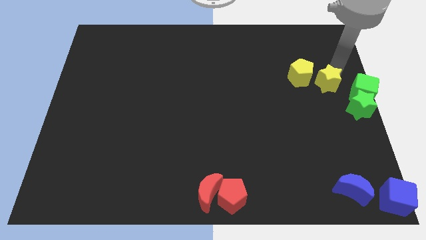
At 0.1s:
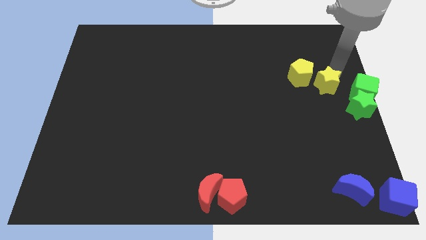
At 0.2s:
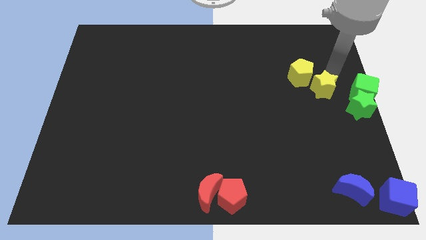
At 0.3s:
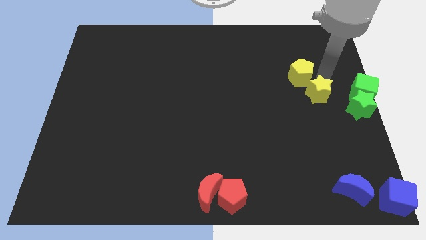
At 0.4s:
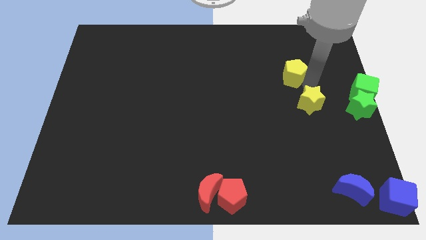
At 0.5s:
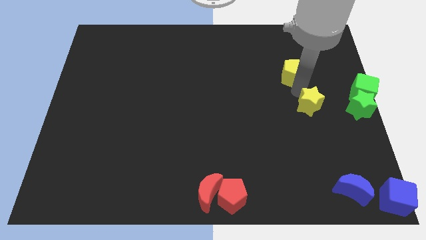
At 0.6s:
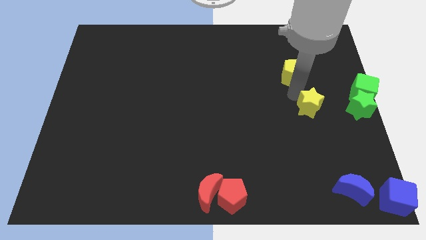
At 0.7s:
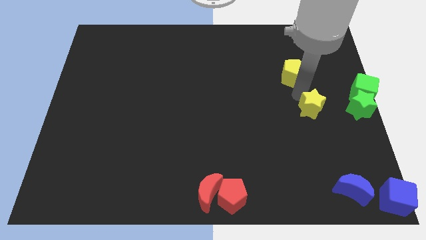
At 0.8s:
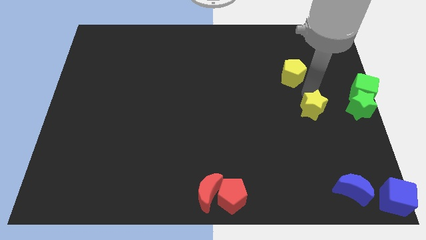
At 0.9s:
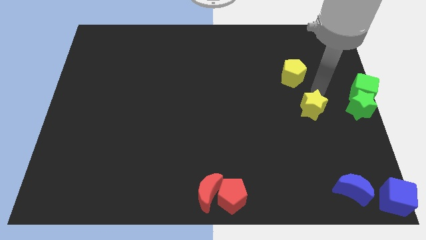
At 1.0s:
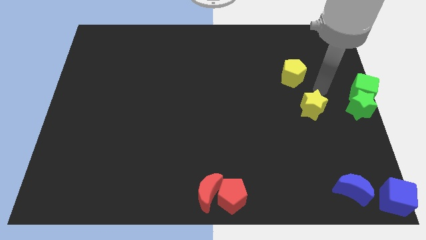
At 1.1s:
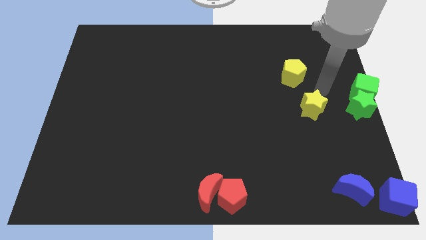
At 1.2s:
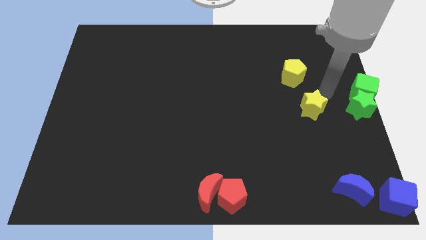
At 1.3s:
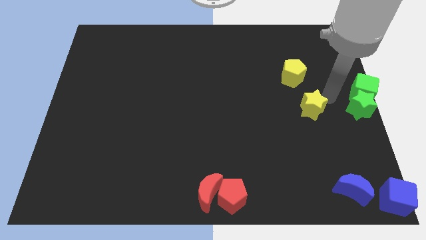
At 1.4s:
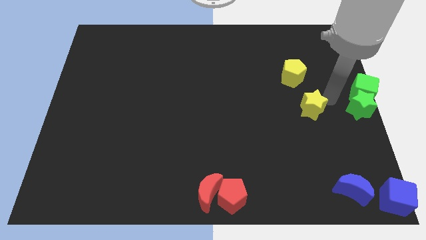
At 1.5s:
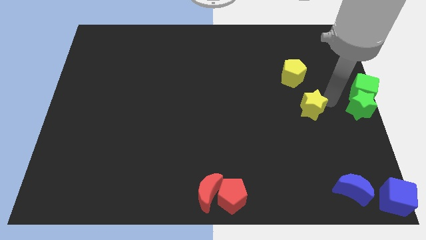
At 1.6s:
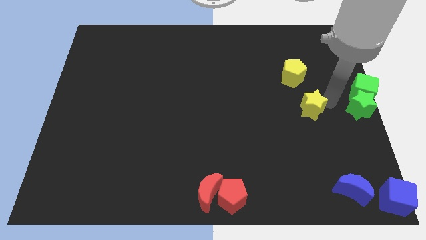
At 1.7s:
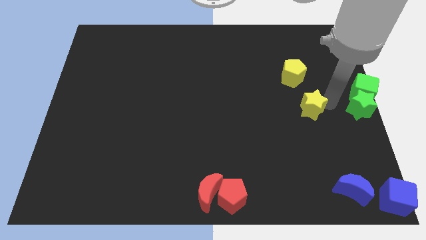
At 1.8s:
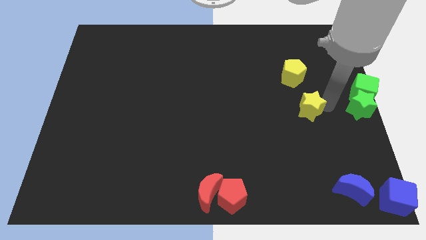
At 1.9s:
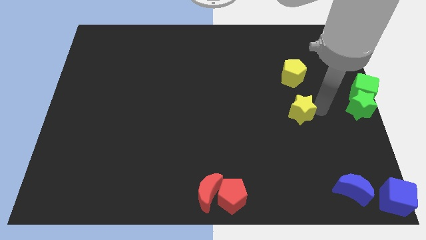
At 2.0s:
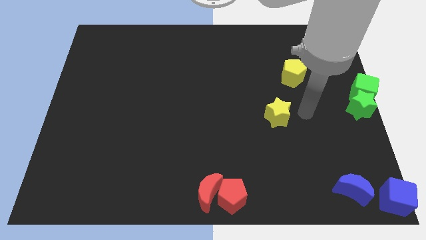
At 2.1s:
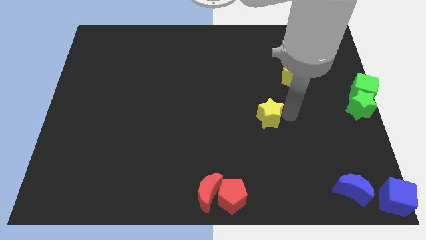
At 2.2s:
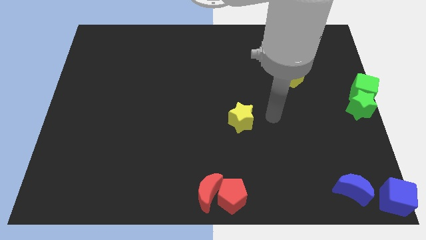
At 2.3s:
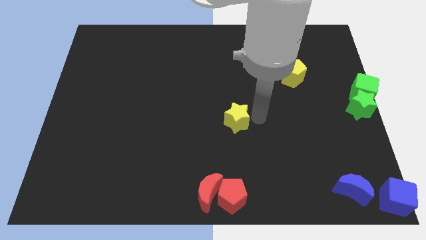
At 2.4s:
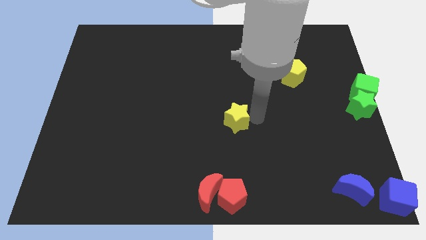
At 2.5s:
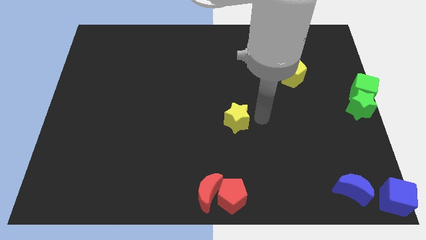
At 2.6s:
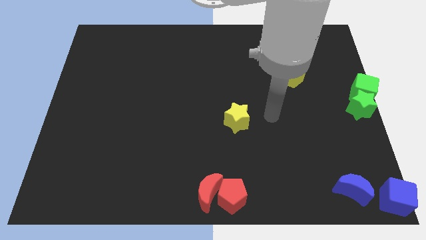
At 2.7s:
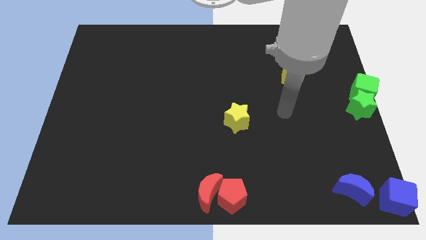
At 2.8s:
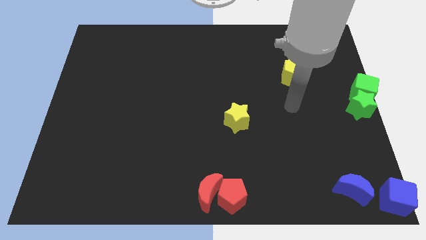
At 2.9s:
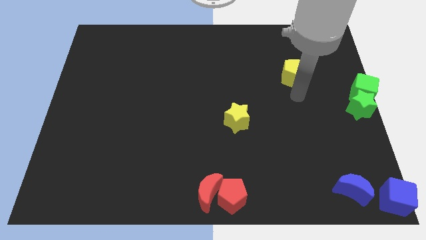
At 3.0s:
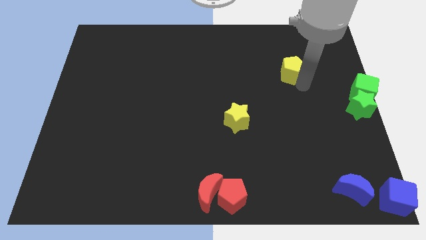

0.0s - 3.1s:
move yellow star to the centre of the board

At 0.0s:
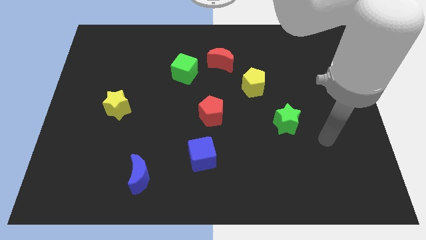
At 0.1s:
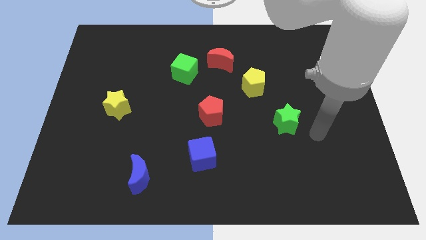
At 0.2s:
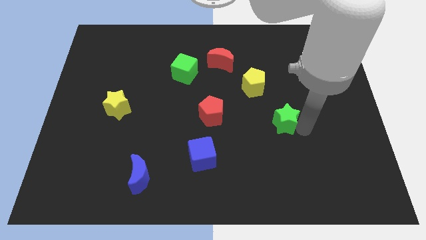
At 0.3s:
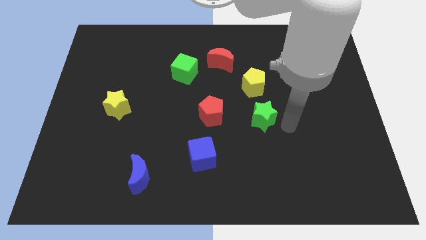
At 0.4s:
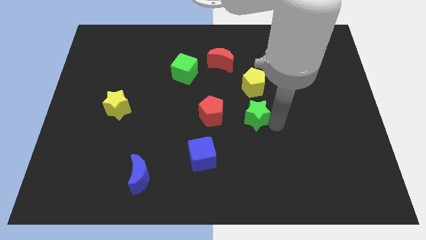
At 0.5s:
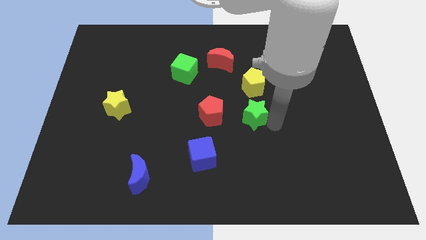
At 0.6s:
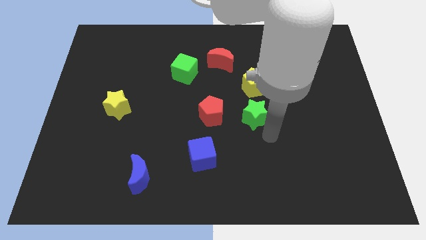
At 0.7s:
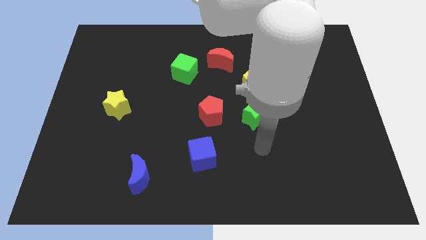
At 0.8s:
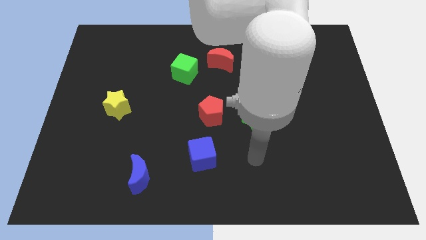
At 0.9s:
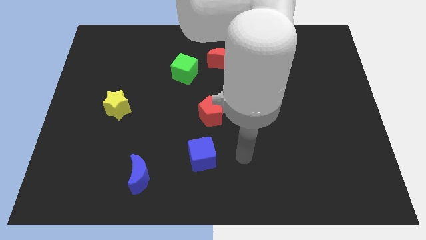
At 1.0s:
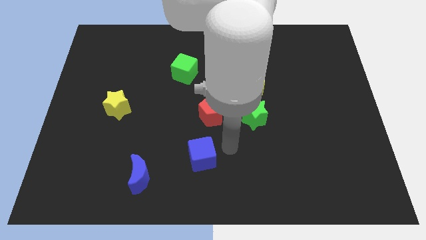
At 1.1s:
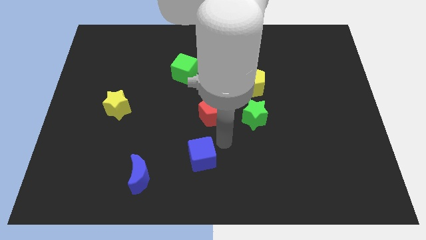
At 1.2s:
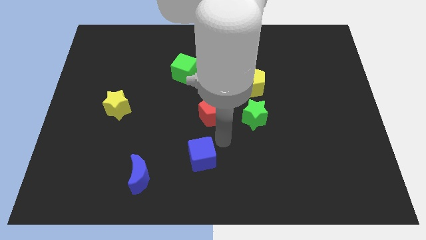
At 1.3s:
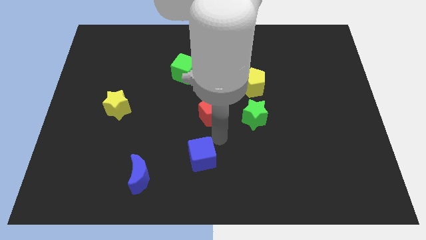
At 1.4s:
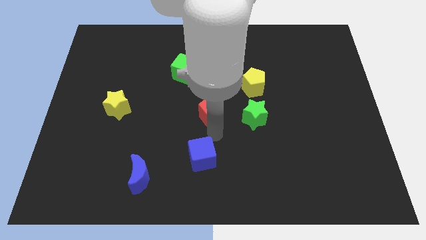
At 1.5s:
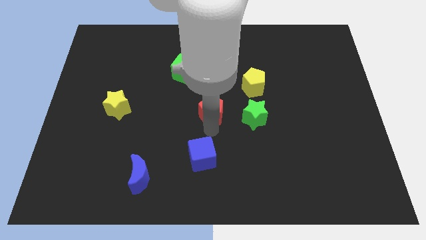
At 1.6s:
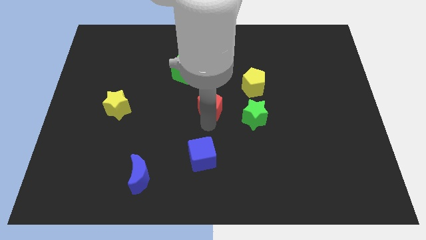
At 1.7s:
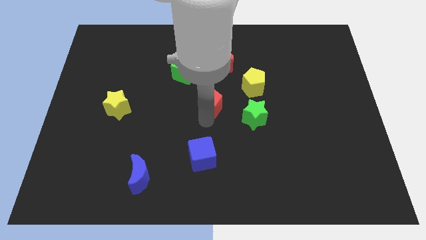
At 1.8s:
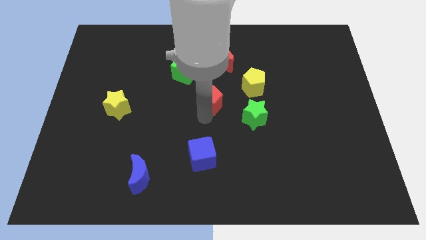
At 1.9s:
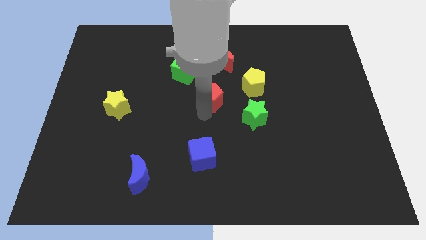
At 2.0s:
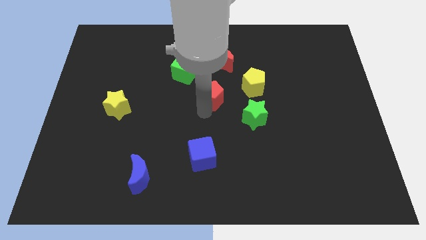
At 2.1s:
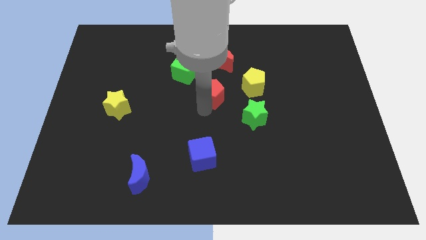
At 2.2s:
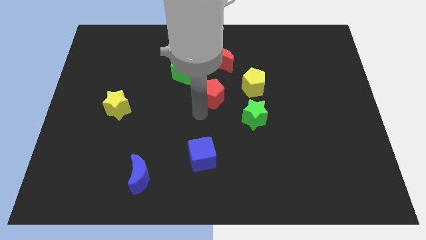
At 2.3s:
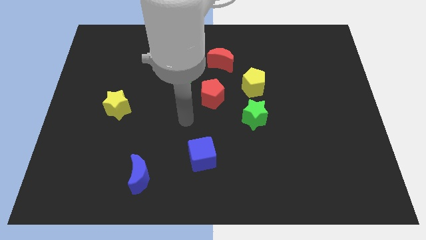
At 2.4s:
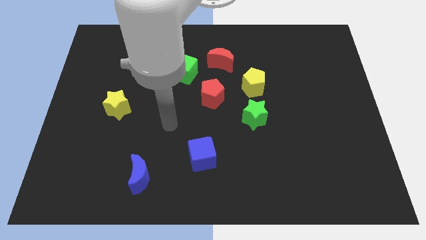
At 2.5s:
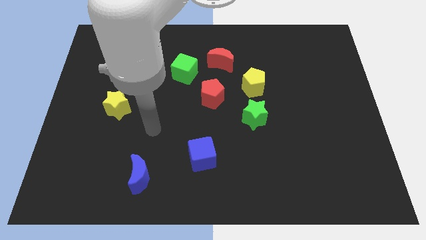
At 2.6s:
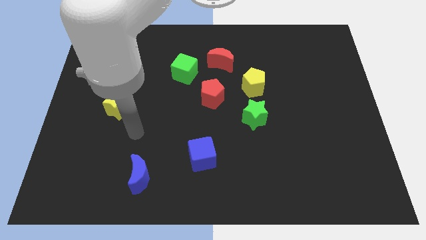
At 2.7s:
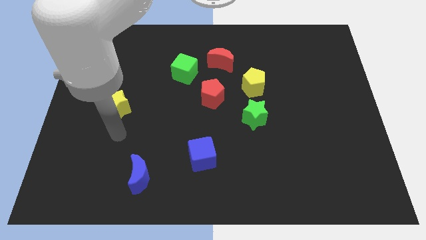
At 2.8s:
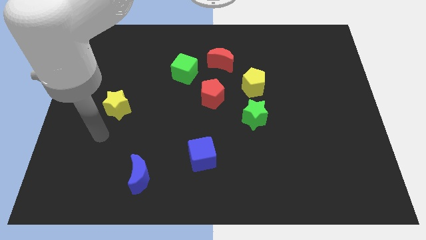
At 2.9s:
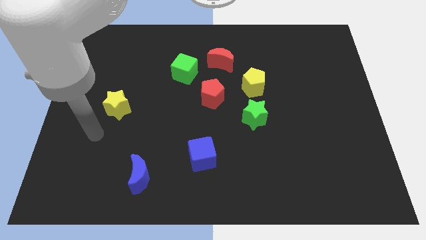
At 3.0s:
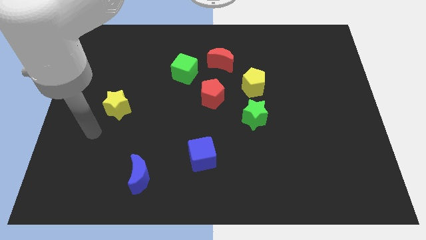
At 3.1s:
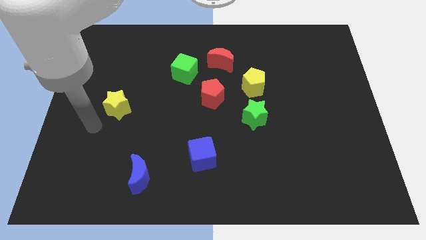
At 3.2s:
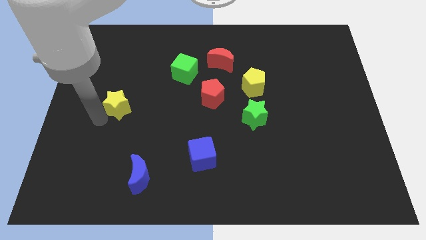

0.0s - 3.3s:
move the red pentagon in between the green blocks

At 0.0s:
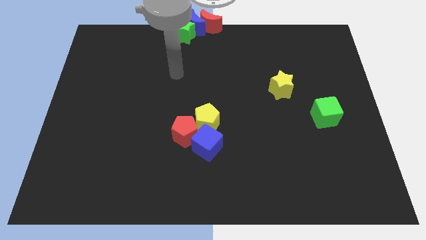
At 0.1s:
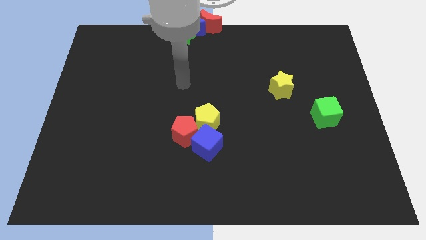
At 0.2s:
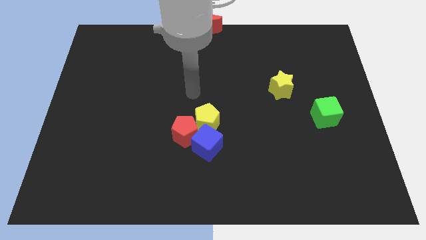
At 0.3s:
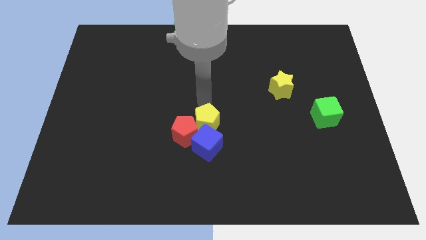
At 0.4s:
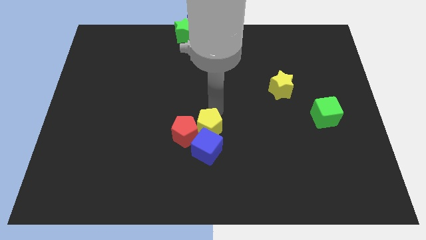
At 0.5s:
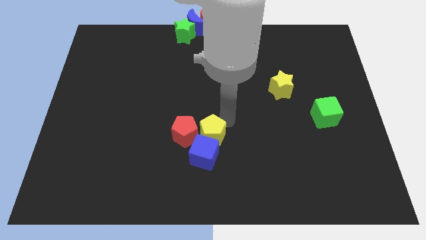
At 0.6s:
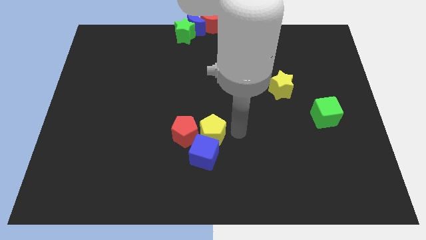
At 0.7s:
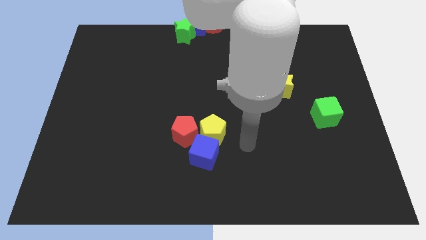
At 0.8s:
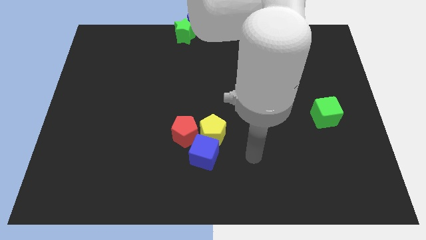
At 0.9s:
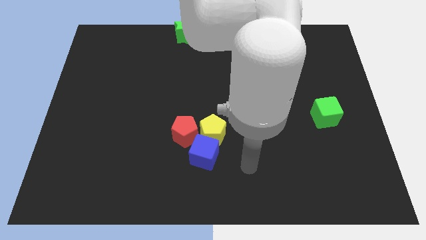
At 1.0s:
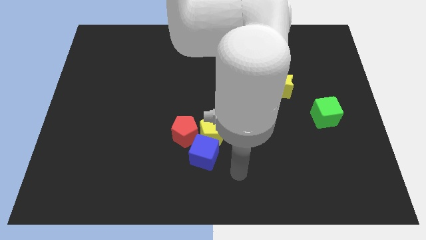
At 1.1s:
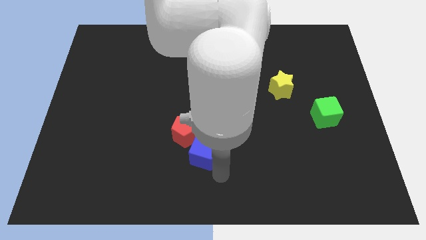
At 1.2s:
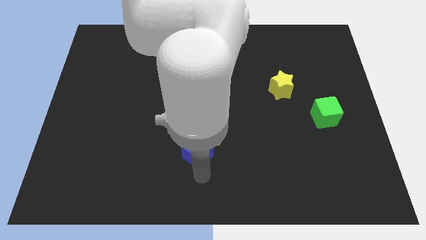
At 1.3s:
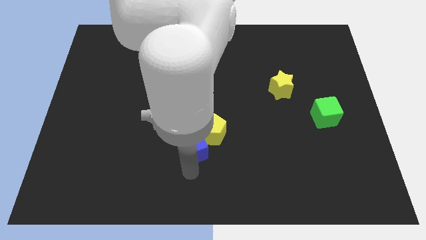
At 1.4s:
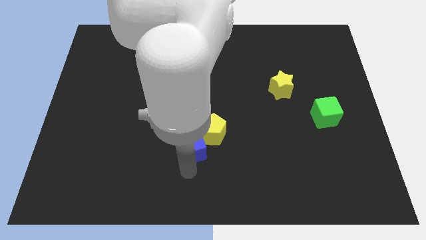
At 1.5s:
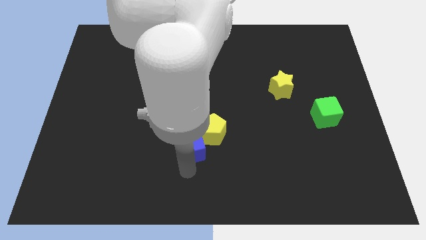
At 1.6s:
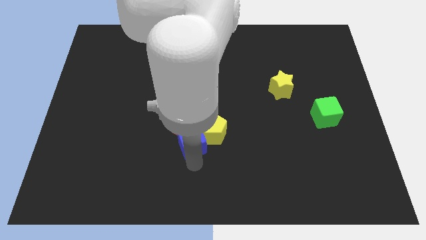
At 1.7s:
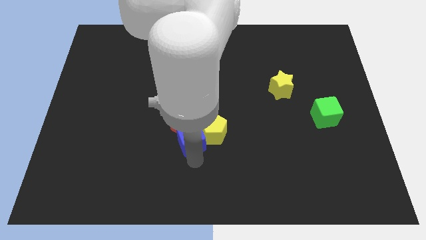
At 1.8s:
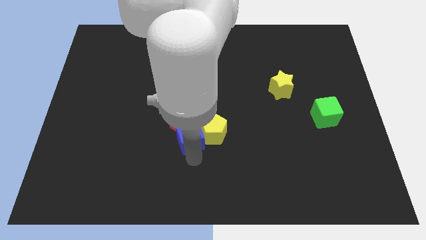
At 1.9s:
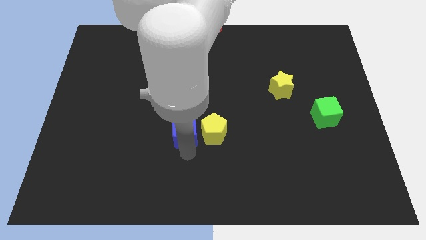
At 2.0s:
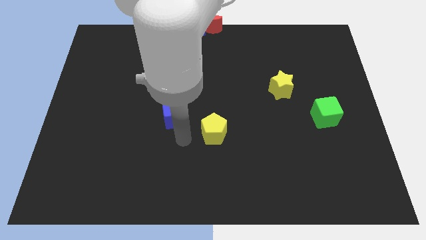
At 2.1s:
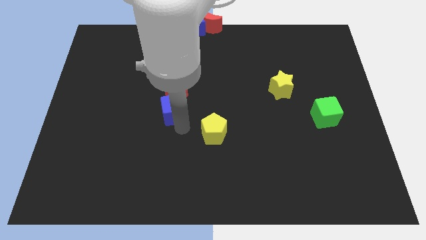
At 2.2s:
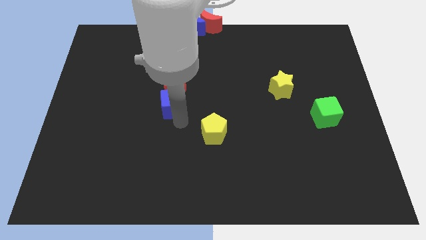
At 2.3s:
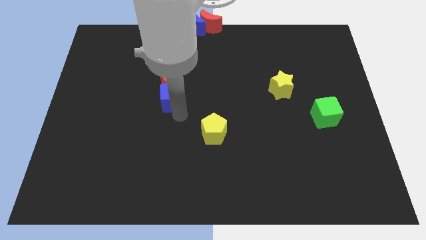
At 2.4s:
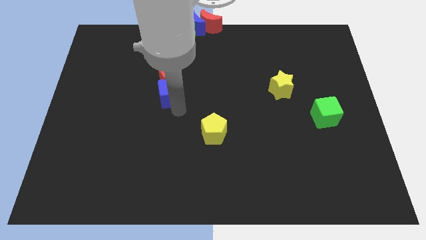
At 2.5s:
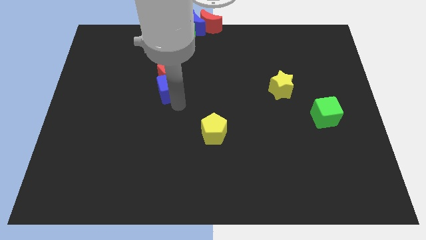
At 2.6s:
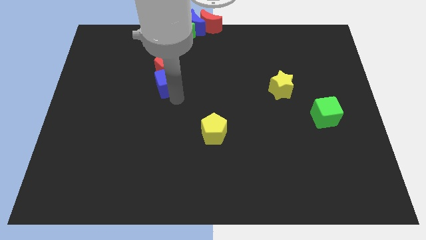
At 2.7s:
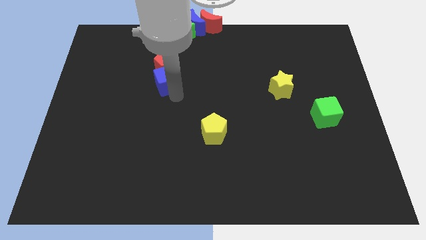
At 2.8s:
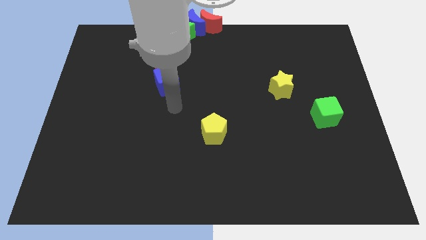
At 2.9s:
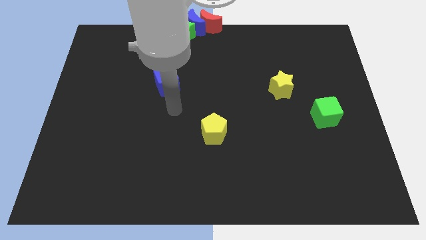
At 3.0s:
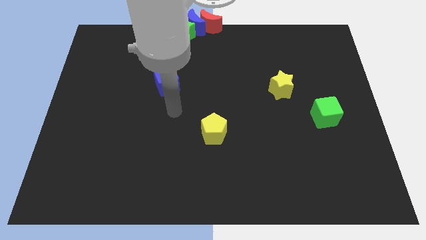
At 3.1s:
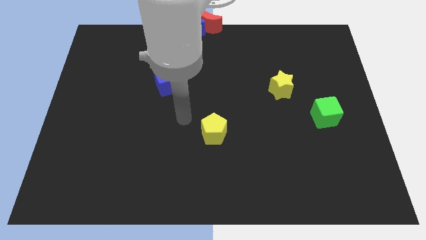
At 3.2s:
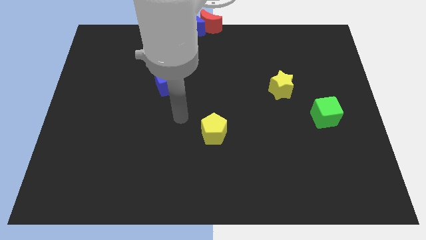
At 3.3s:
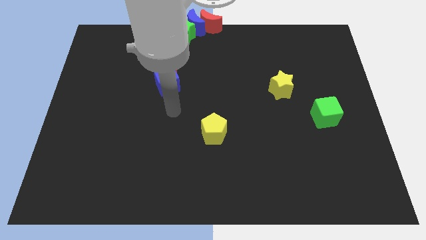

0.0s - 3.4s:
move the blue cube into the red pentagon
